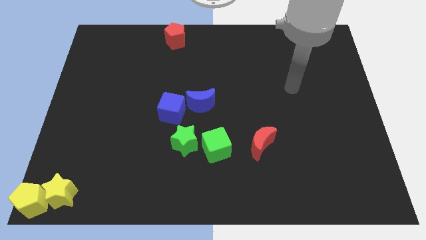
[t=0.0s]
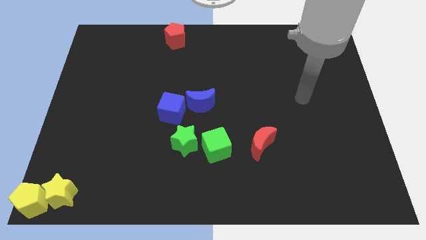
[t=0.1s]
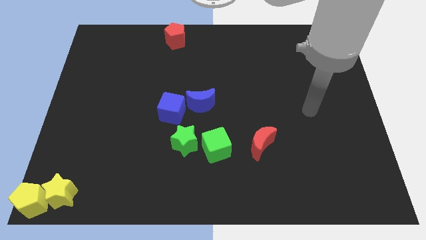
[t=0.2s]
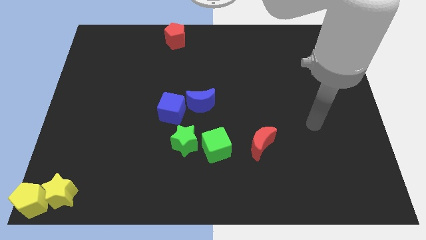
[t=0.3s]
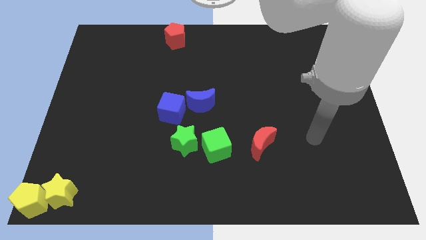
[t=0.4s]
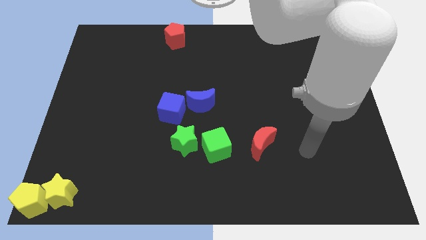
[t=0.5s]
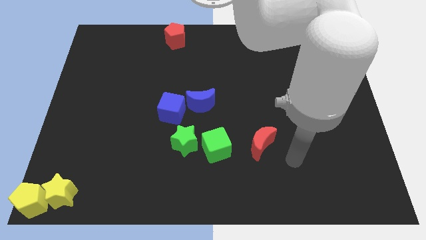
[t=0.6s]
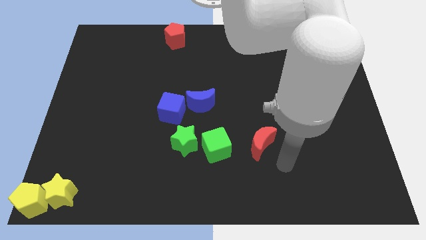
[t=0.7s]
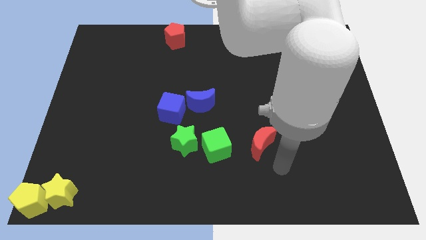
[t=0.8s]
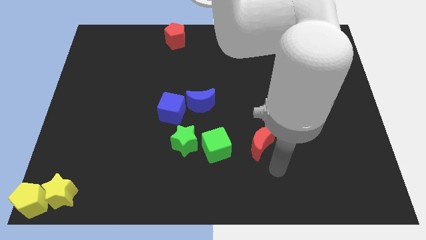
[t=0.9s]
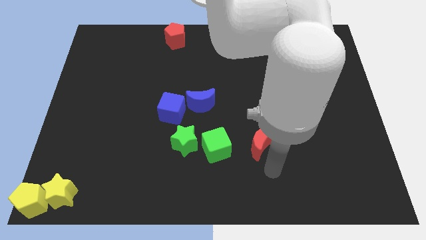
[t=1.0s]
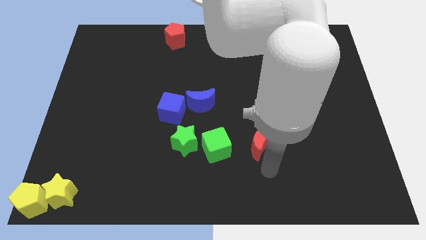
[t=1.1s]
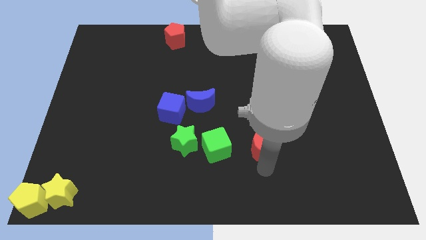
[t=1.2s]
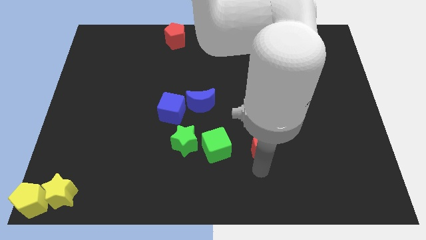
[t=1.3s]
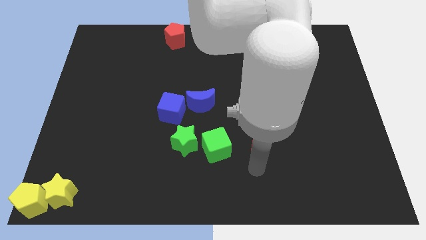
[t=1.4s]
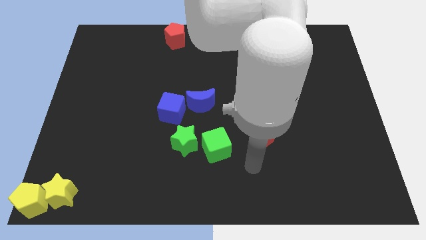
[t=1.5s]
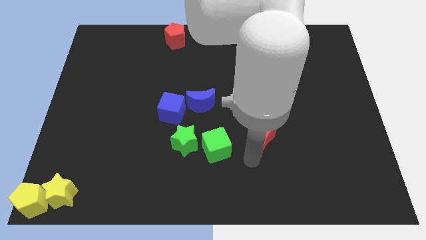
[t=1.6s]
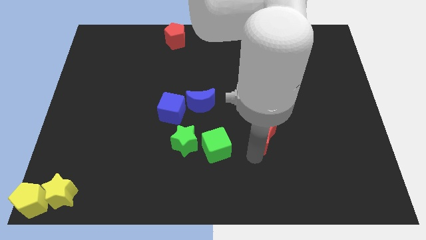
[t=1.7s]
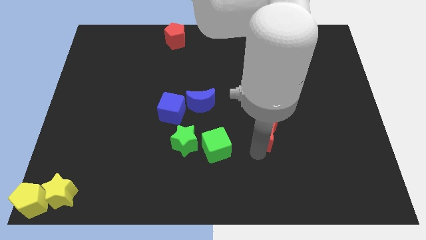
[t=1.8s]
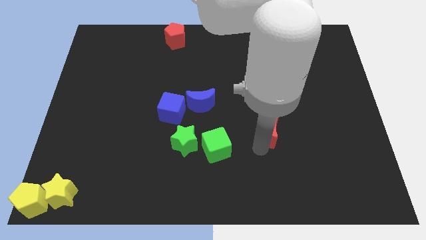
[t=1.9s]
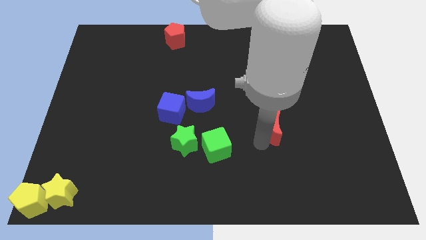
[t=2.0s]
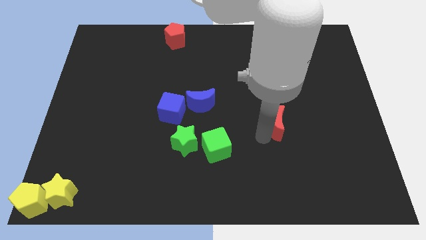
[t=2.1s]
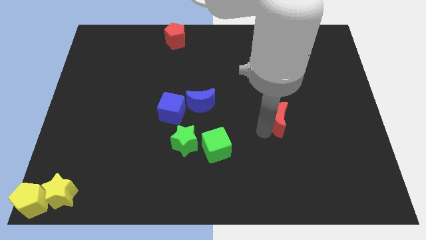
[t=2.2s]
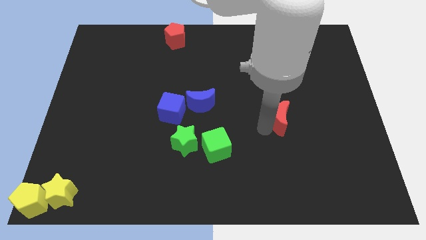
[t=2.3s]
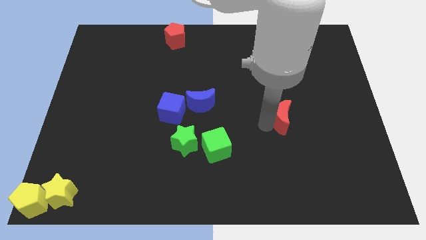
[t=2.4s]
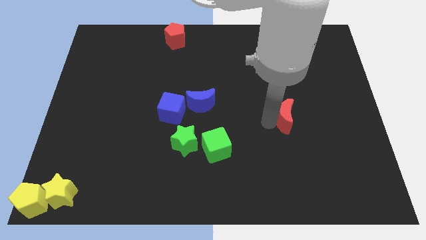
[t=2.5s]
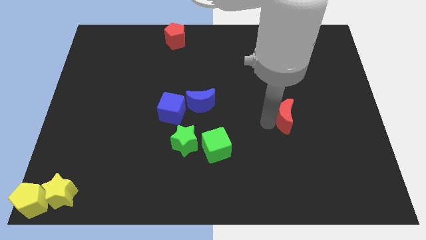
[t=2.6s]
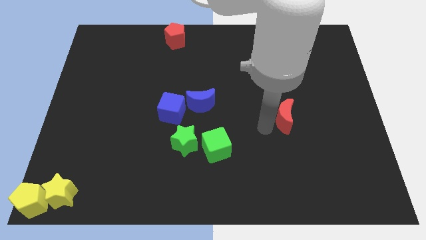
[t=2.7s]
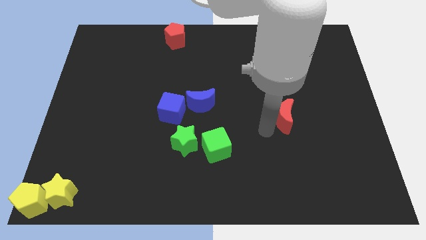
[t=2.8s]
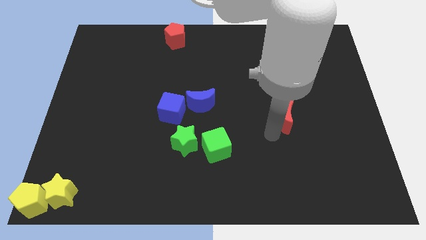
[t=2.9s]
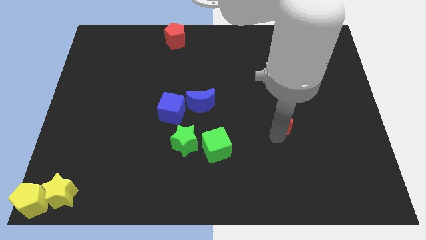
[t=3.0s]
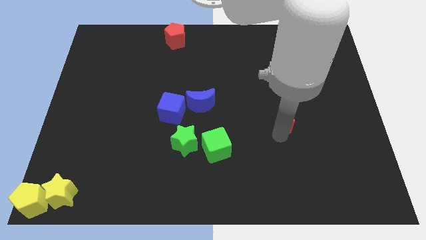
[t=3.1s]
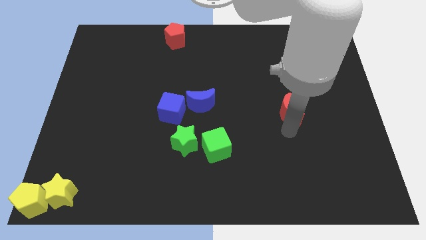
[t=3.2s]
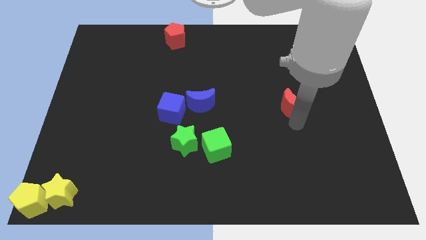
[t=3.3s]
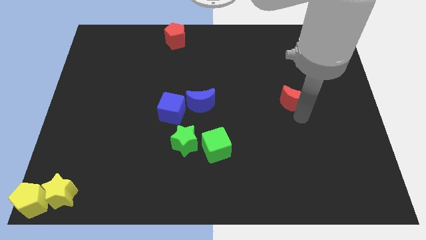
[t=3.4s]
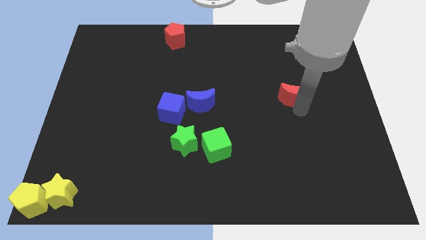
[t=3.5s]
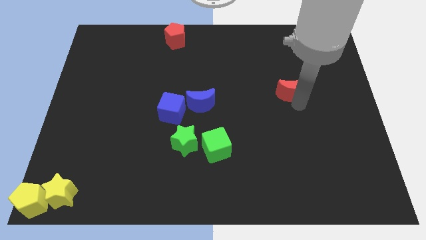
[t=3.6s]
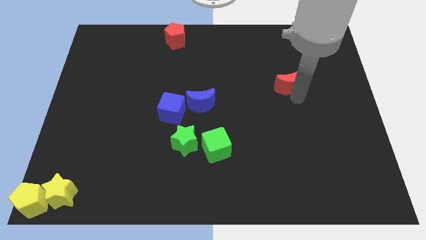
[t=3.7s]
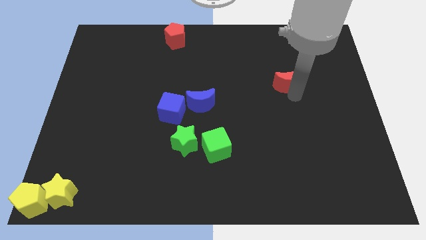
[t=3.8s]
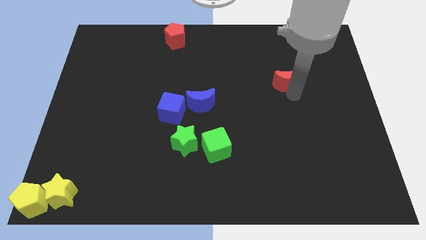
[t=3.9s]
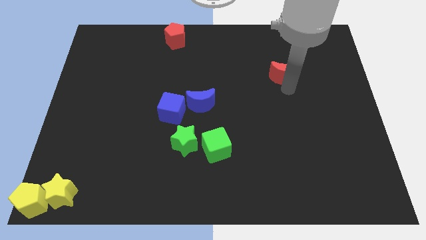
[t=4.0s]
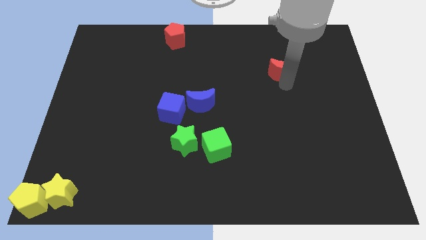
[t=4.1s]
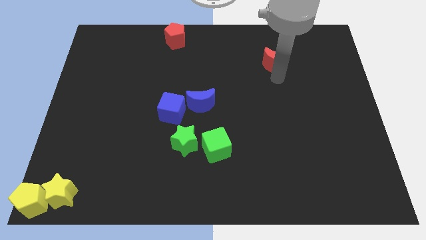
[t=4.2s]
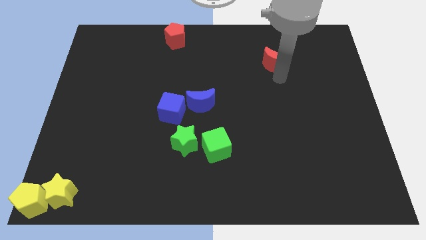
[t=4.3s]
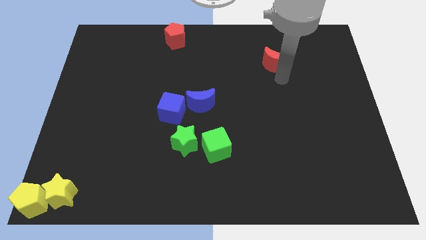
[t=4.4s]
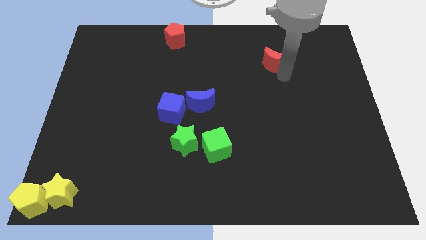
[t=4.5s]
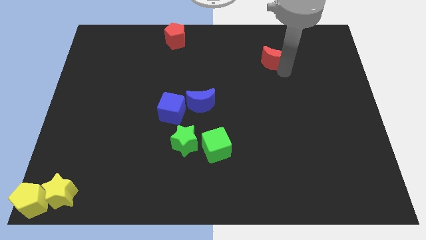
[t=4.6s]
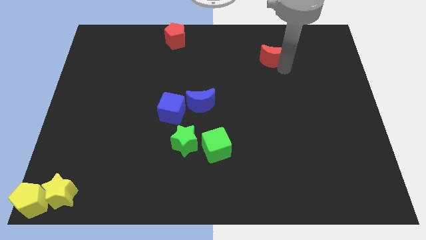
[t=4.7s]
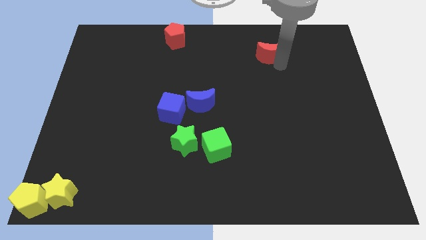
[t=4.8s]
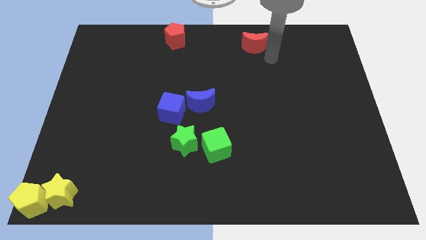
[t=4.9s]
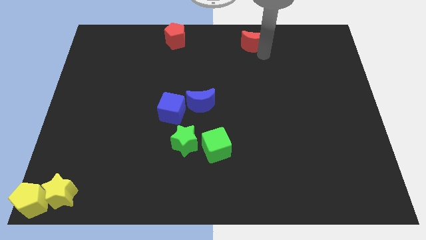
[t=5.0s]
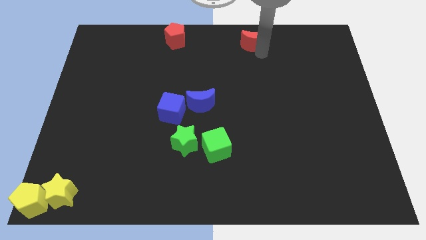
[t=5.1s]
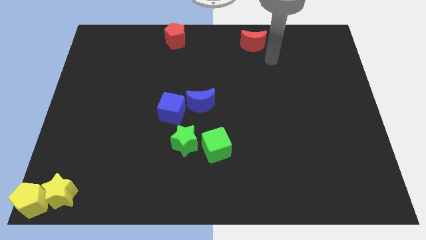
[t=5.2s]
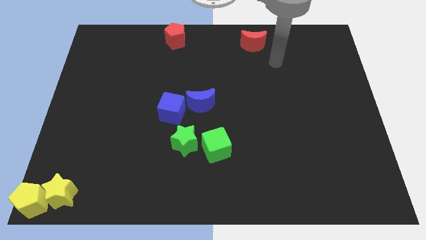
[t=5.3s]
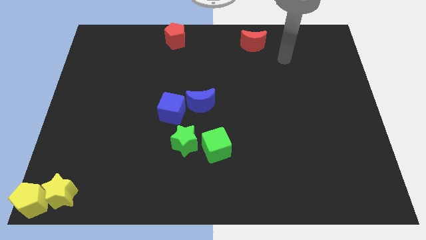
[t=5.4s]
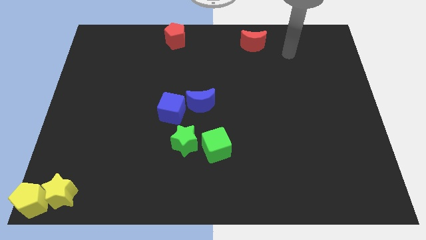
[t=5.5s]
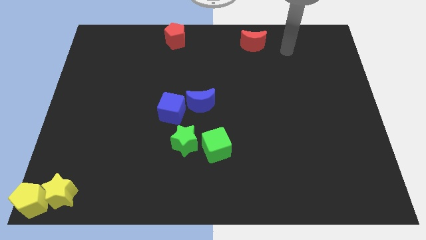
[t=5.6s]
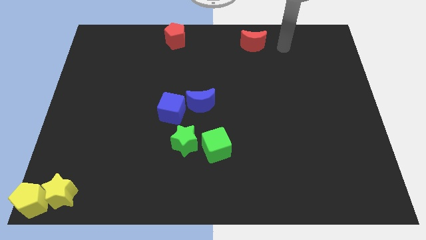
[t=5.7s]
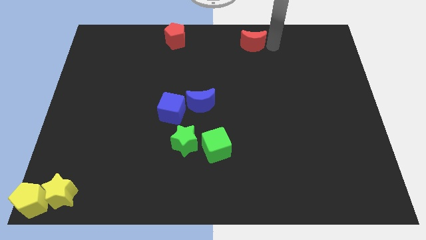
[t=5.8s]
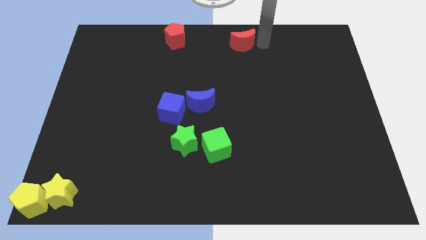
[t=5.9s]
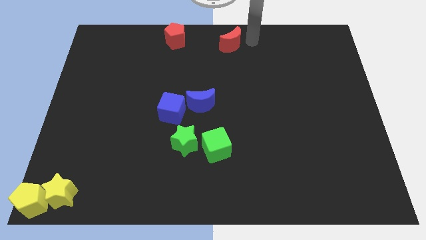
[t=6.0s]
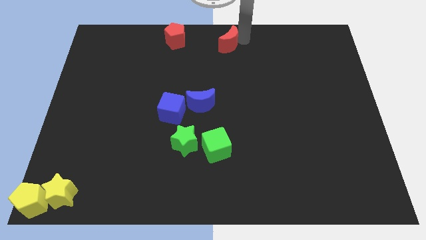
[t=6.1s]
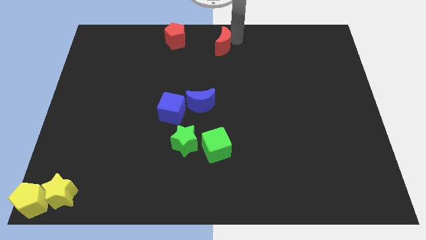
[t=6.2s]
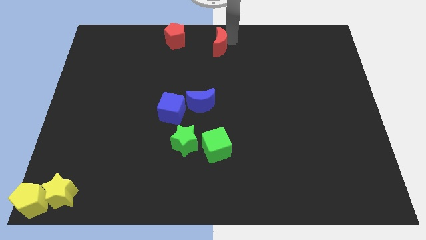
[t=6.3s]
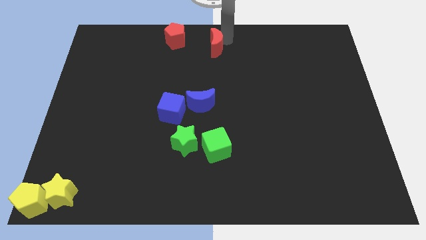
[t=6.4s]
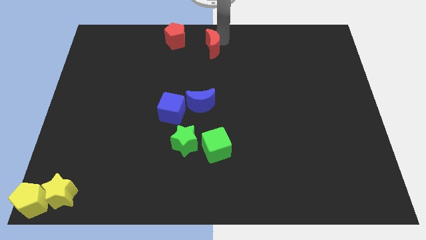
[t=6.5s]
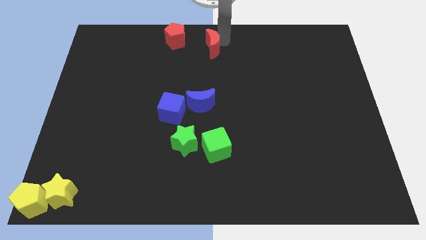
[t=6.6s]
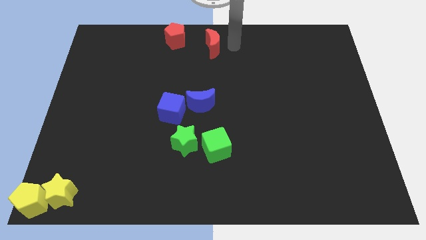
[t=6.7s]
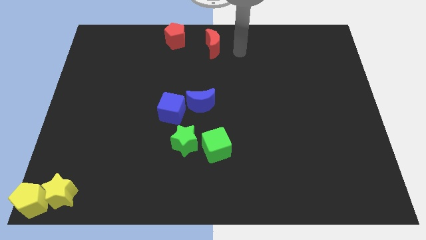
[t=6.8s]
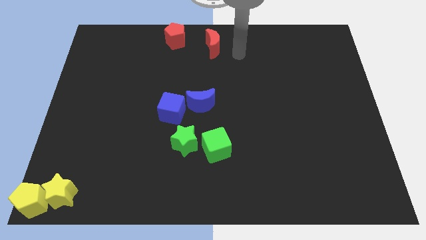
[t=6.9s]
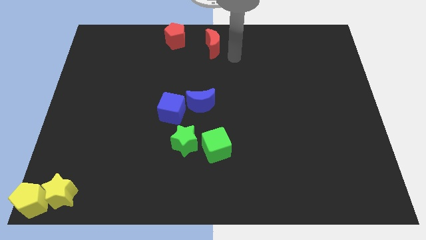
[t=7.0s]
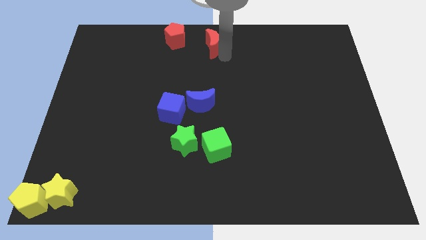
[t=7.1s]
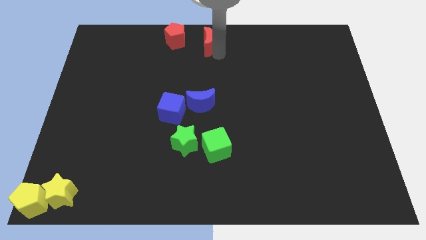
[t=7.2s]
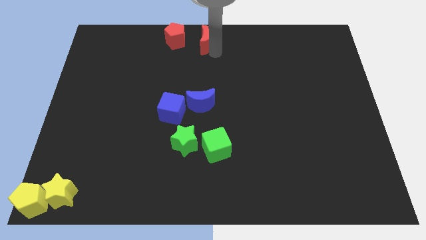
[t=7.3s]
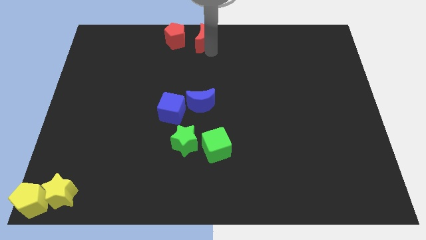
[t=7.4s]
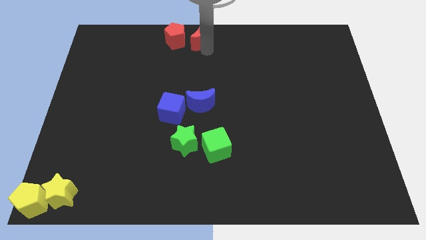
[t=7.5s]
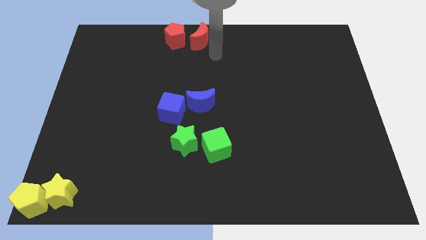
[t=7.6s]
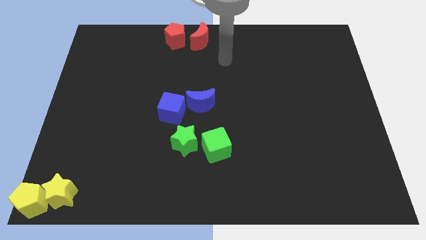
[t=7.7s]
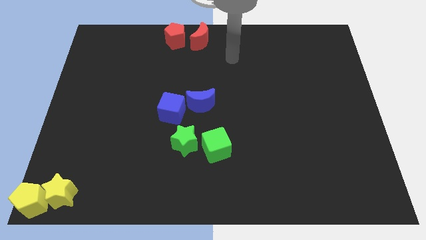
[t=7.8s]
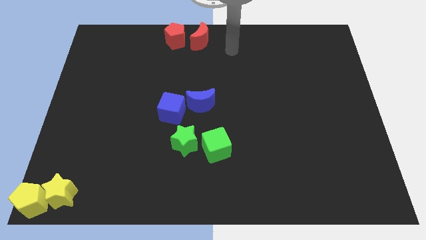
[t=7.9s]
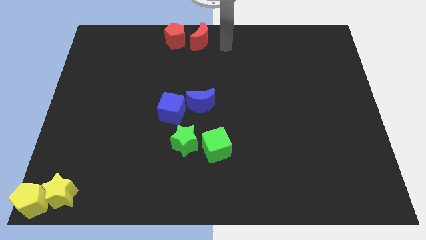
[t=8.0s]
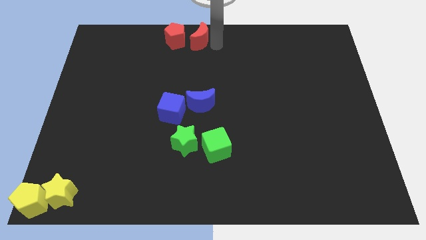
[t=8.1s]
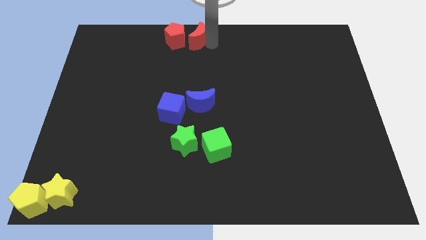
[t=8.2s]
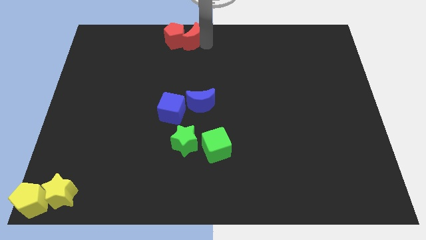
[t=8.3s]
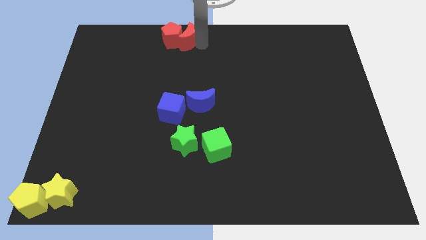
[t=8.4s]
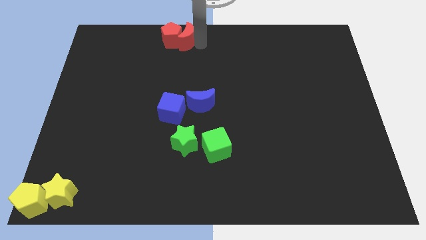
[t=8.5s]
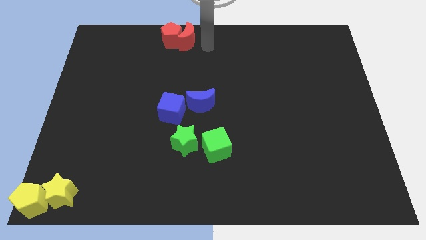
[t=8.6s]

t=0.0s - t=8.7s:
push the red crescent to the right of the red pentagon

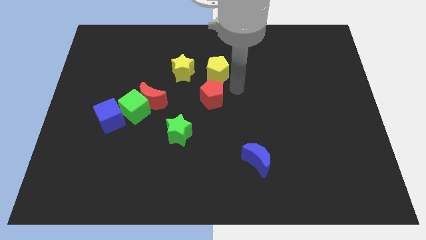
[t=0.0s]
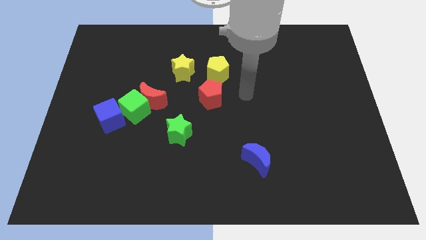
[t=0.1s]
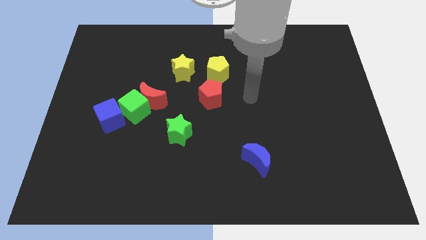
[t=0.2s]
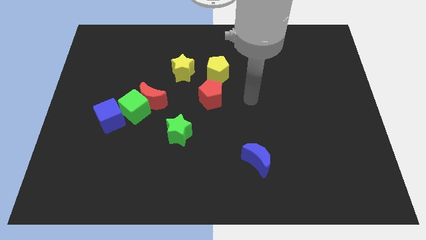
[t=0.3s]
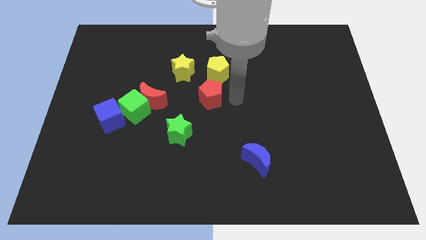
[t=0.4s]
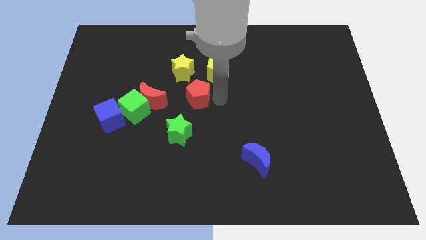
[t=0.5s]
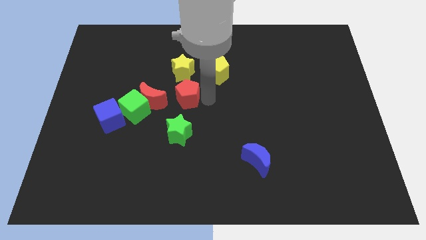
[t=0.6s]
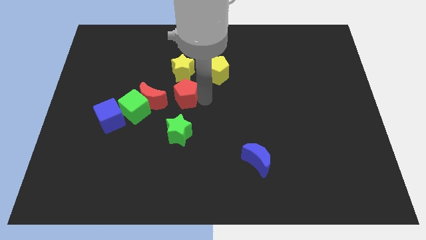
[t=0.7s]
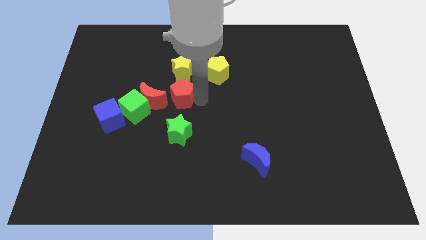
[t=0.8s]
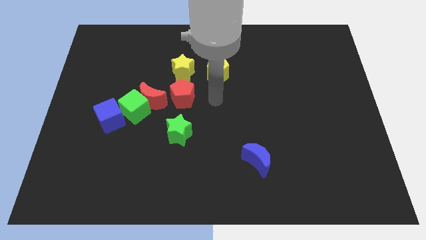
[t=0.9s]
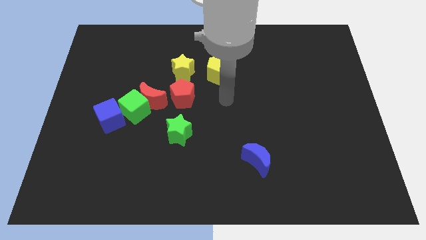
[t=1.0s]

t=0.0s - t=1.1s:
move the red pentagon to the bottom of the yellow star
